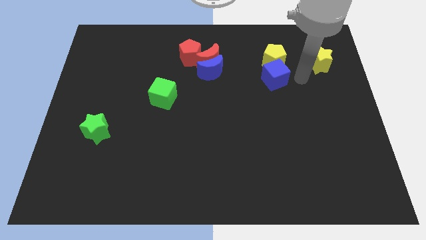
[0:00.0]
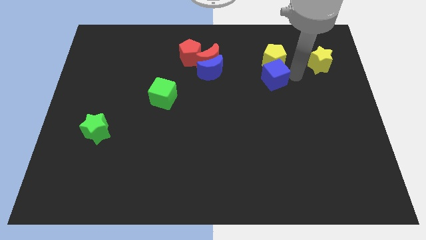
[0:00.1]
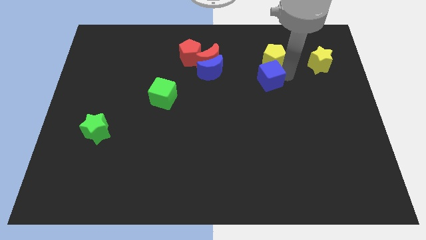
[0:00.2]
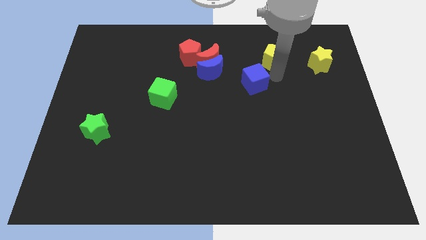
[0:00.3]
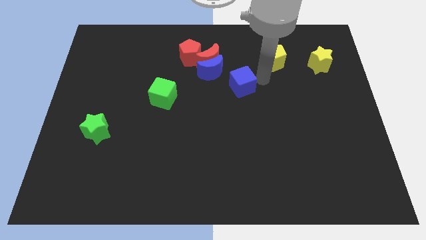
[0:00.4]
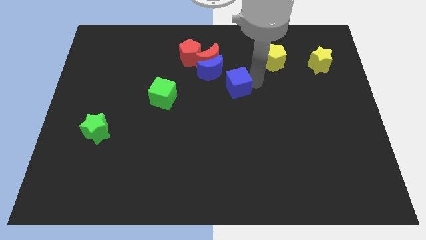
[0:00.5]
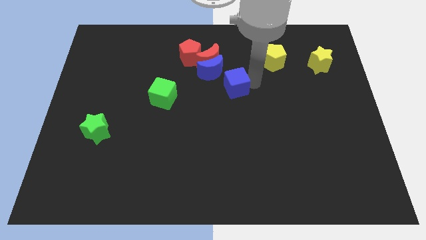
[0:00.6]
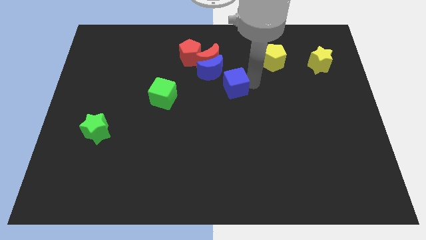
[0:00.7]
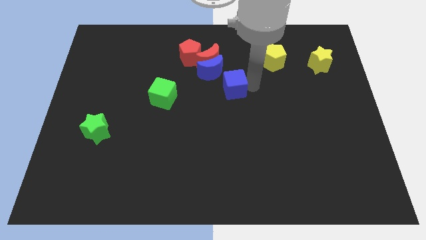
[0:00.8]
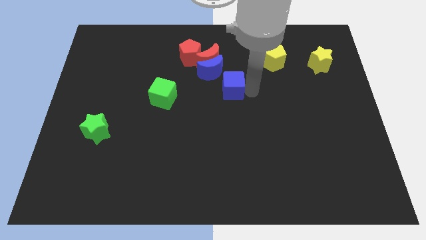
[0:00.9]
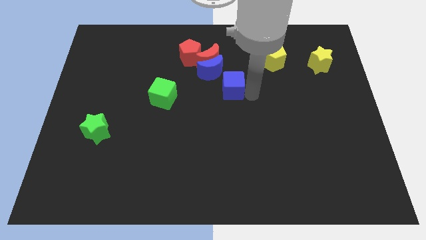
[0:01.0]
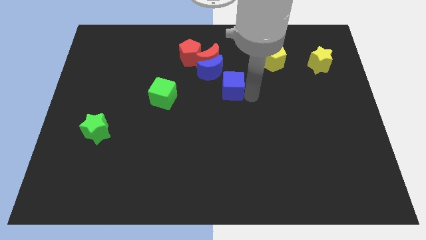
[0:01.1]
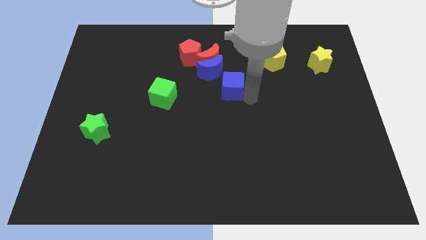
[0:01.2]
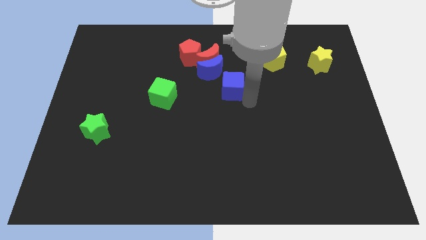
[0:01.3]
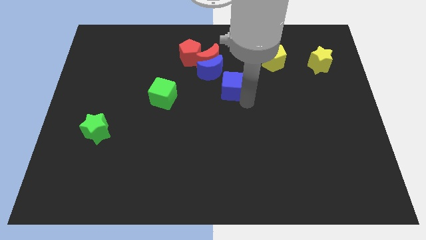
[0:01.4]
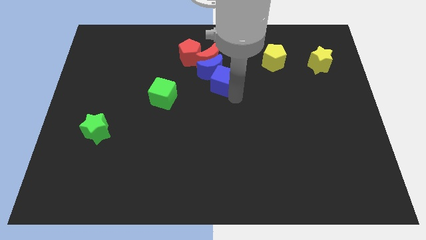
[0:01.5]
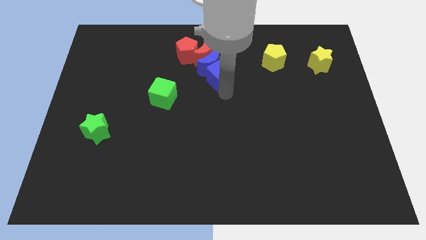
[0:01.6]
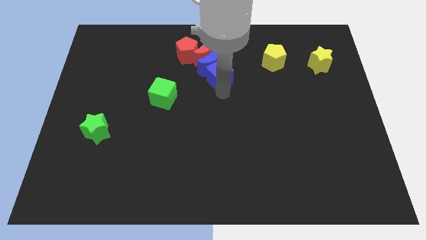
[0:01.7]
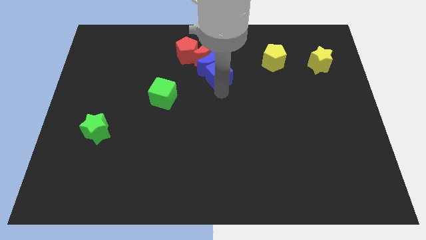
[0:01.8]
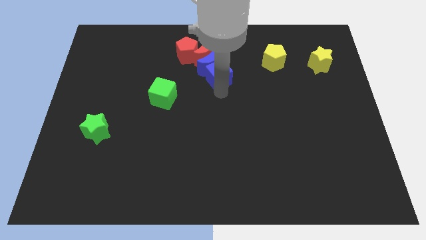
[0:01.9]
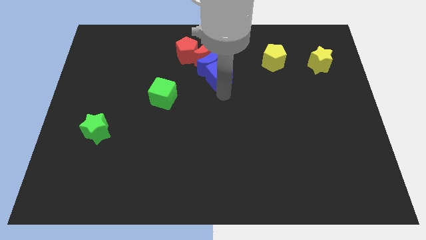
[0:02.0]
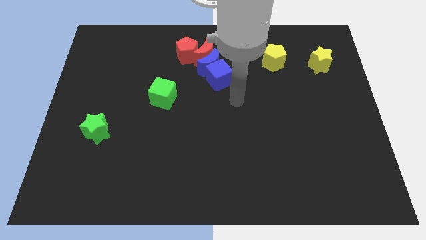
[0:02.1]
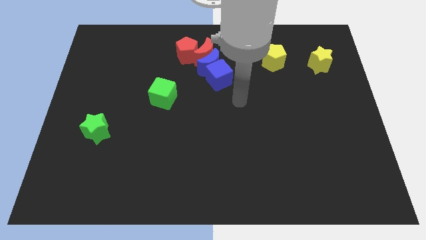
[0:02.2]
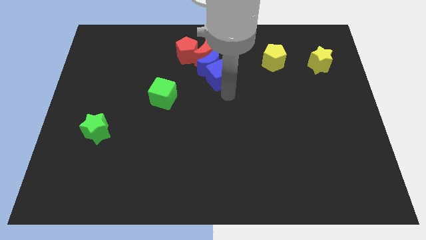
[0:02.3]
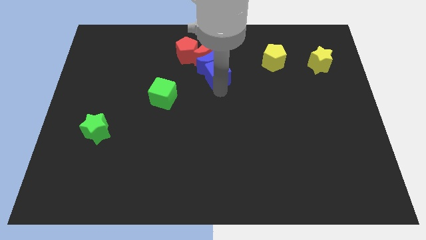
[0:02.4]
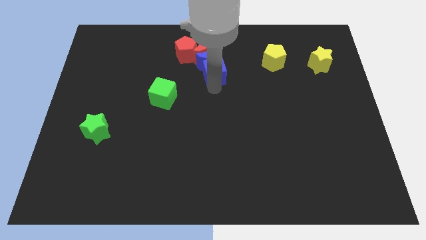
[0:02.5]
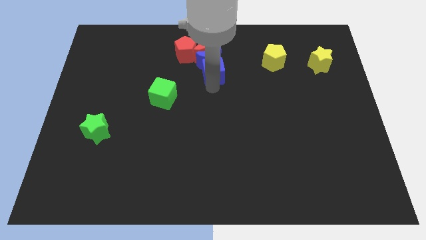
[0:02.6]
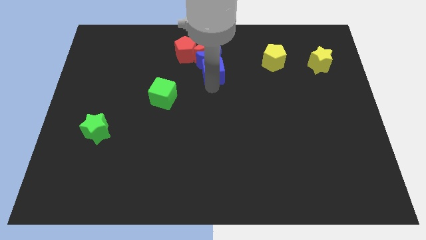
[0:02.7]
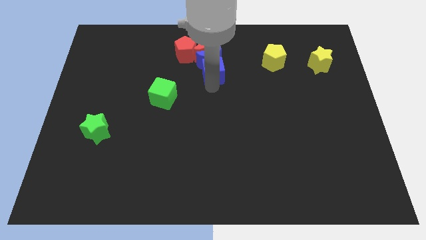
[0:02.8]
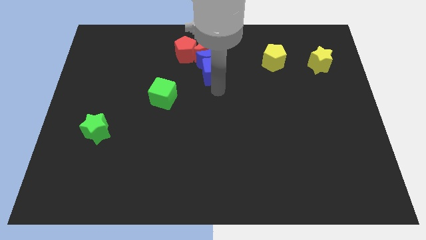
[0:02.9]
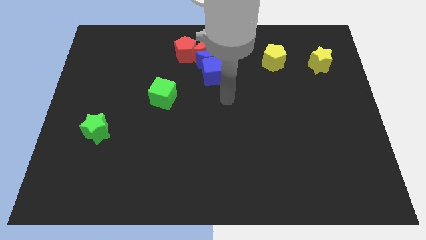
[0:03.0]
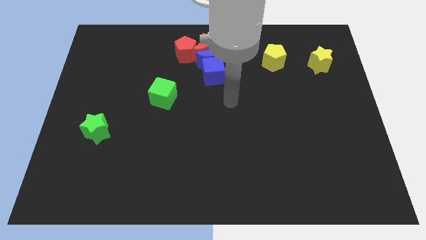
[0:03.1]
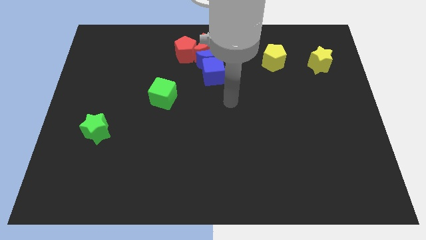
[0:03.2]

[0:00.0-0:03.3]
push the blue cube into the bottom of the blue moon

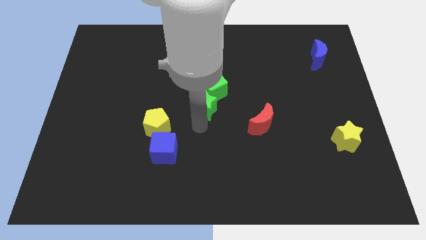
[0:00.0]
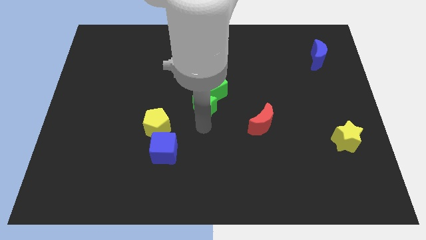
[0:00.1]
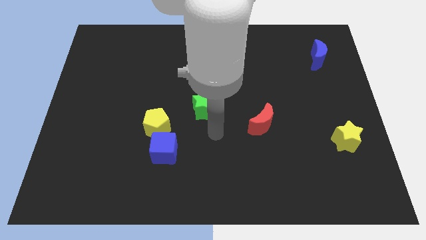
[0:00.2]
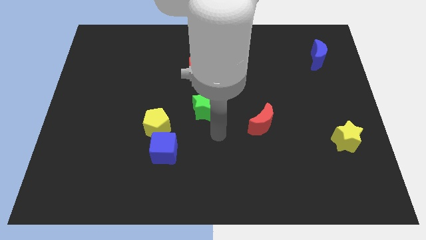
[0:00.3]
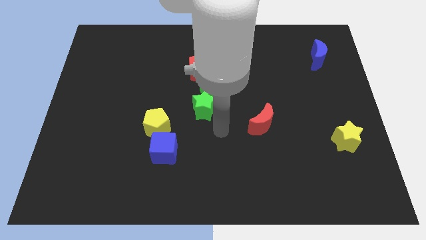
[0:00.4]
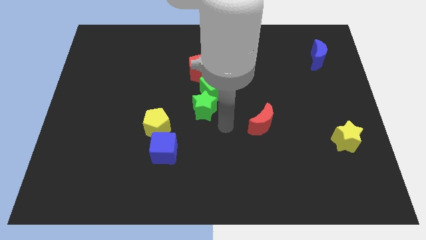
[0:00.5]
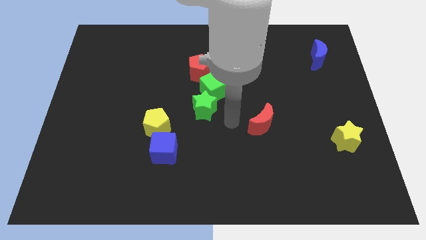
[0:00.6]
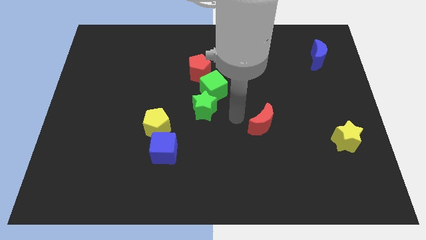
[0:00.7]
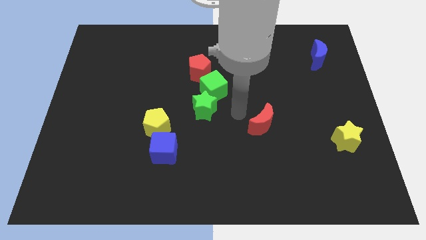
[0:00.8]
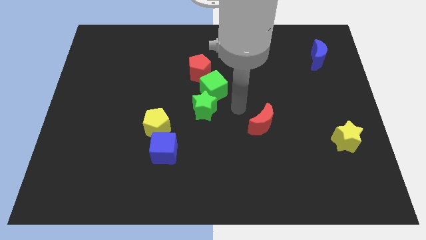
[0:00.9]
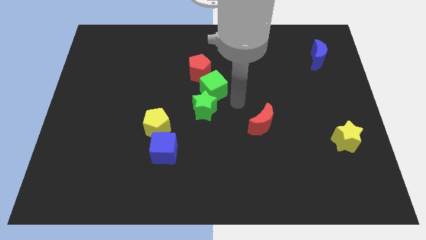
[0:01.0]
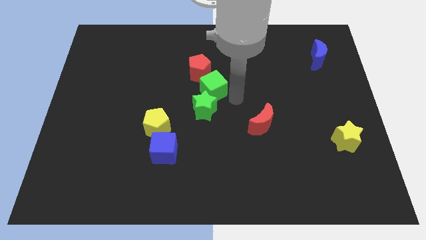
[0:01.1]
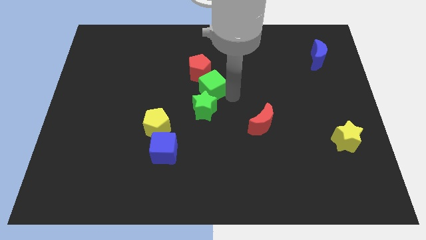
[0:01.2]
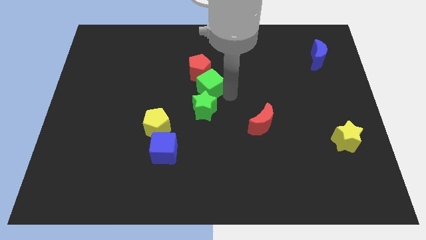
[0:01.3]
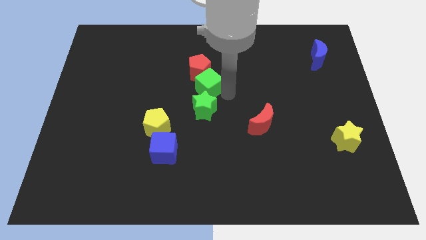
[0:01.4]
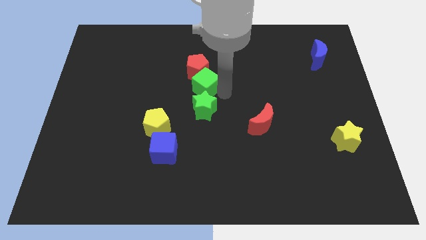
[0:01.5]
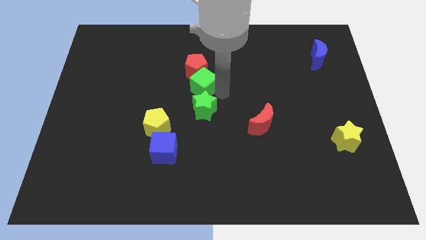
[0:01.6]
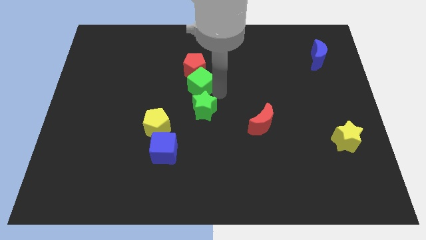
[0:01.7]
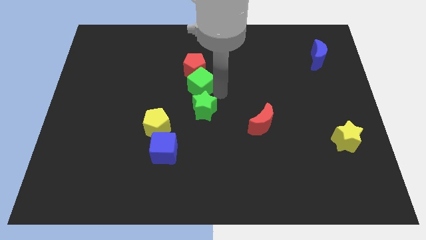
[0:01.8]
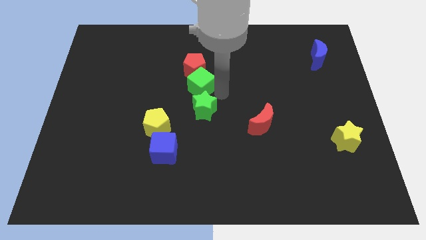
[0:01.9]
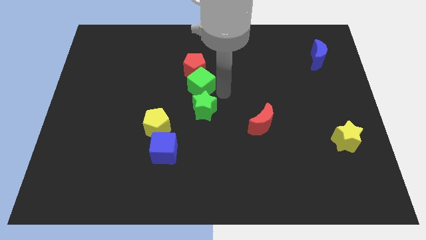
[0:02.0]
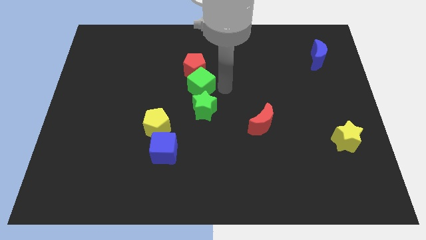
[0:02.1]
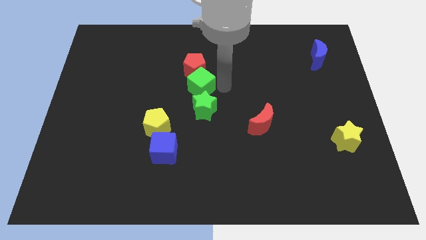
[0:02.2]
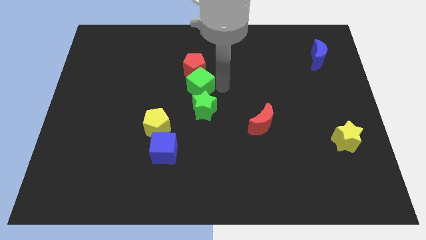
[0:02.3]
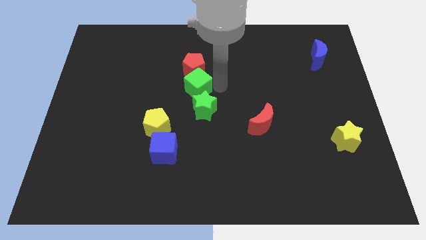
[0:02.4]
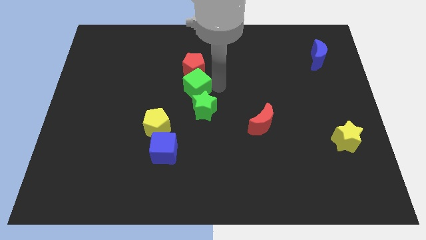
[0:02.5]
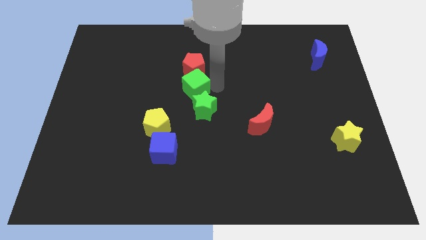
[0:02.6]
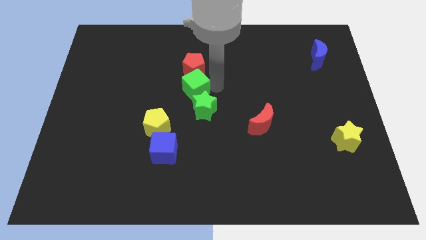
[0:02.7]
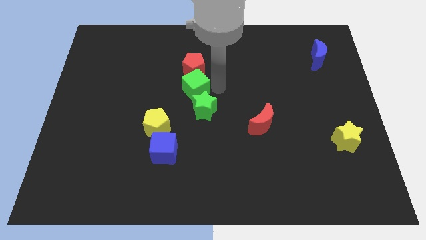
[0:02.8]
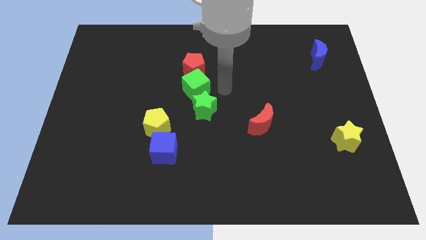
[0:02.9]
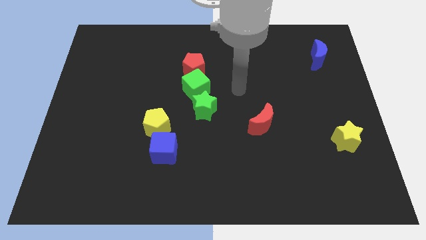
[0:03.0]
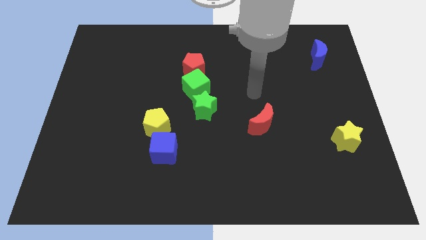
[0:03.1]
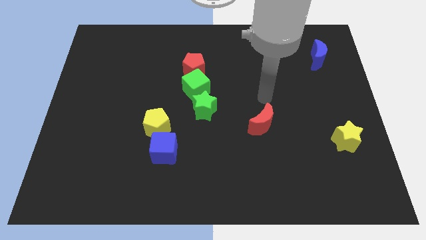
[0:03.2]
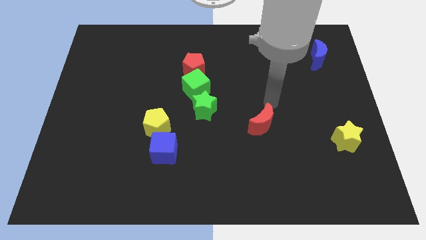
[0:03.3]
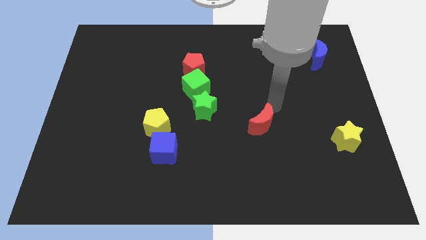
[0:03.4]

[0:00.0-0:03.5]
adjust the green cube in between the green star and the red pentagon

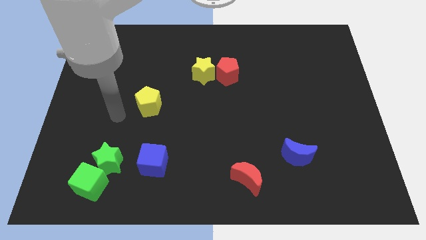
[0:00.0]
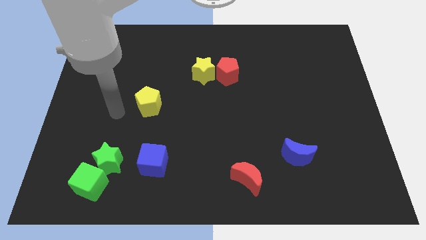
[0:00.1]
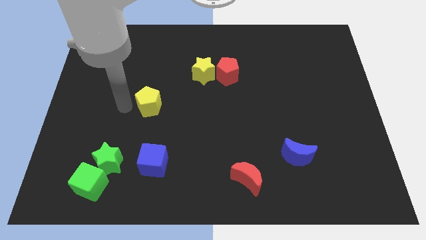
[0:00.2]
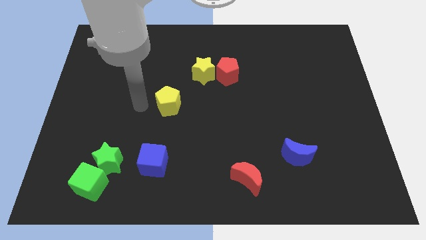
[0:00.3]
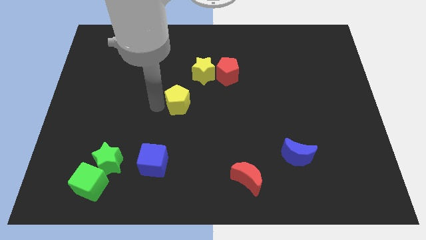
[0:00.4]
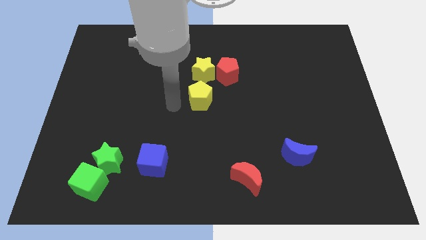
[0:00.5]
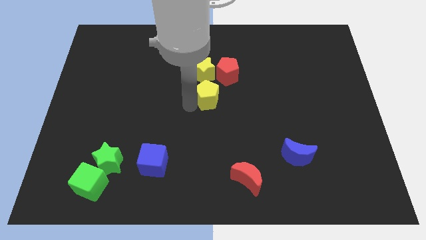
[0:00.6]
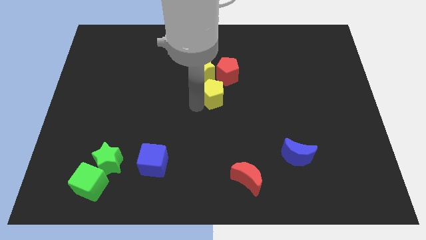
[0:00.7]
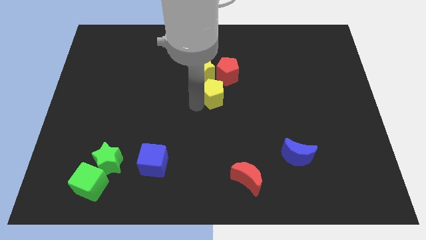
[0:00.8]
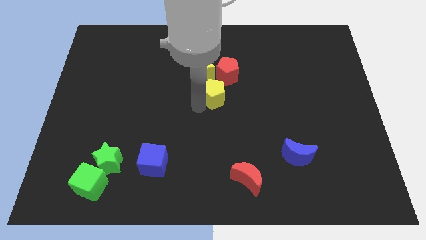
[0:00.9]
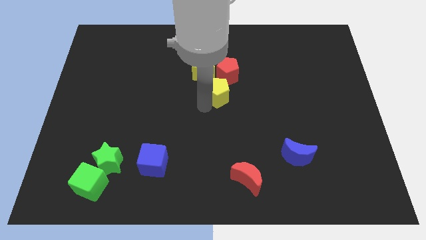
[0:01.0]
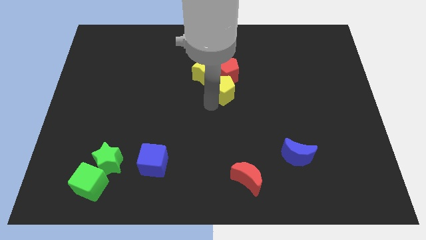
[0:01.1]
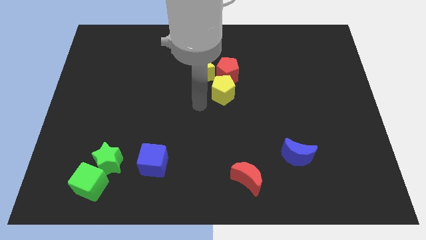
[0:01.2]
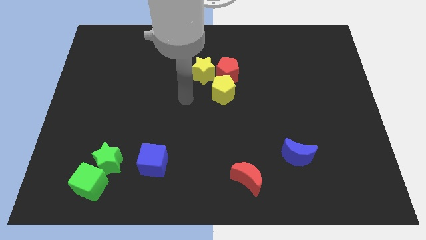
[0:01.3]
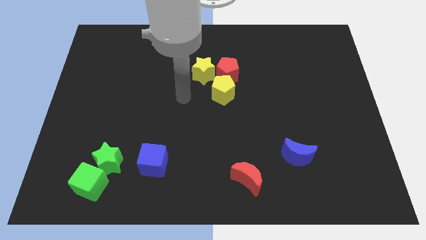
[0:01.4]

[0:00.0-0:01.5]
move the yellow pentagon towards the bottom of the red pentagon

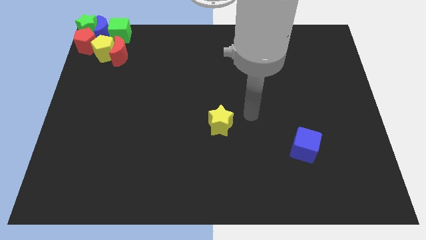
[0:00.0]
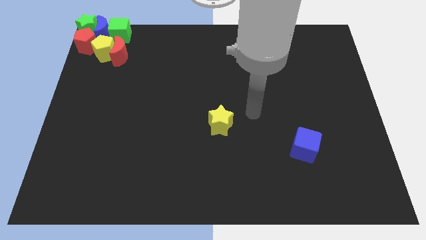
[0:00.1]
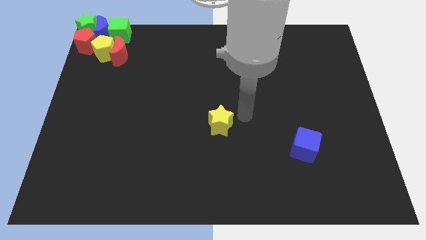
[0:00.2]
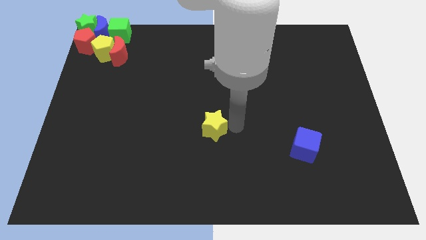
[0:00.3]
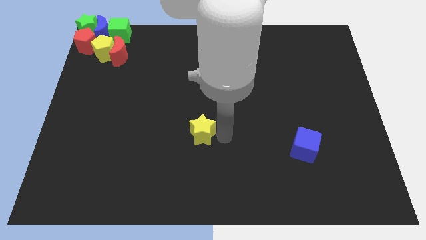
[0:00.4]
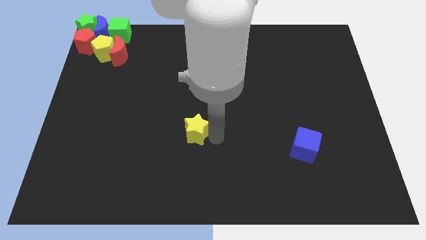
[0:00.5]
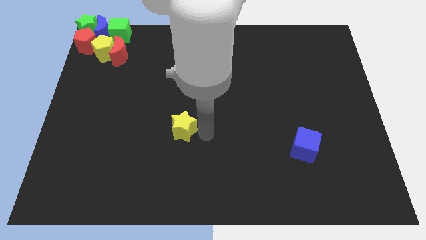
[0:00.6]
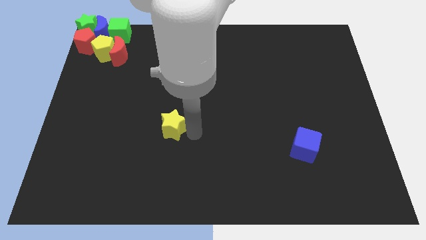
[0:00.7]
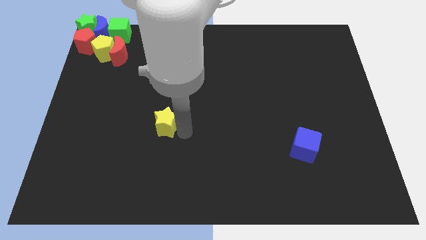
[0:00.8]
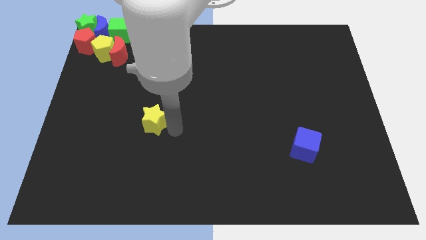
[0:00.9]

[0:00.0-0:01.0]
push the yellow star to the left of the board
